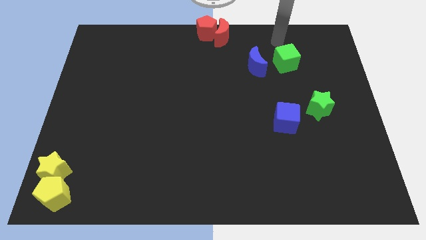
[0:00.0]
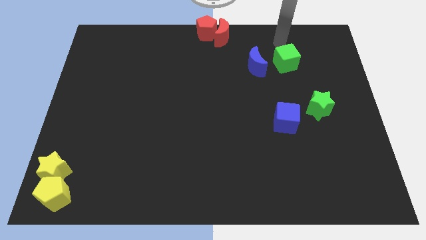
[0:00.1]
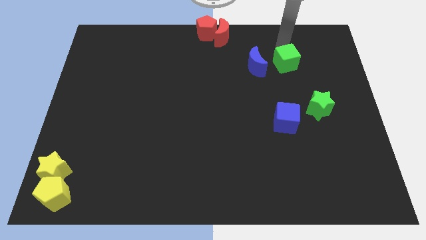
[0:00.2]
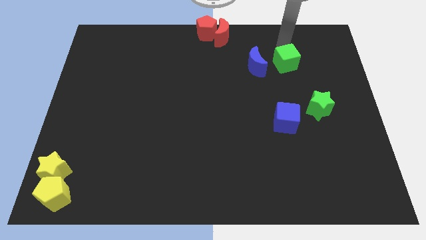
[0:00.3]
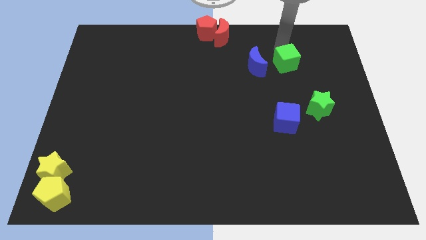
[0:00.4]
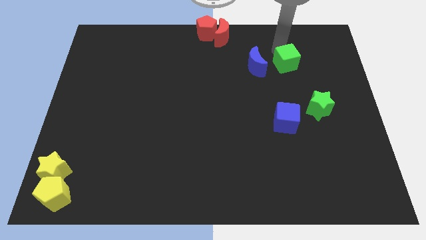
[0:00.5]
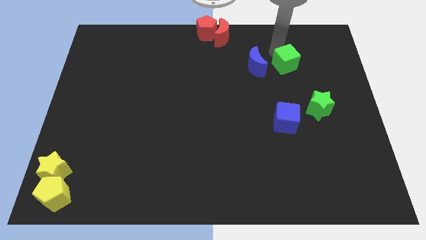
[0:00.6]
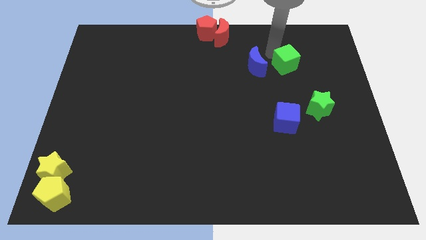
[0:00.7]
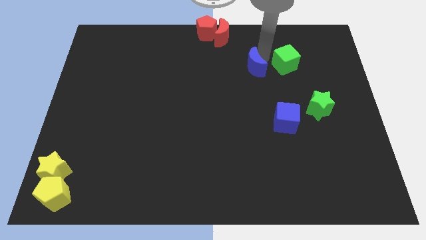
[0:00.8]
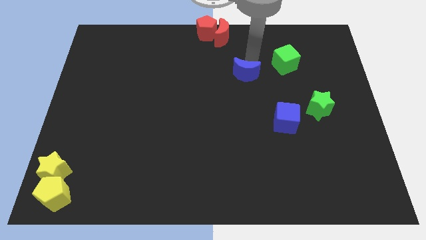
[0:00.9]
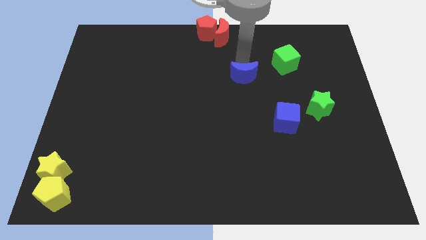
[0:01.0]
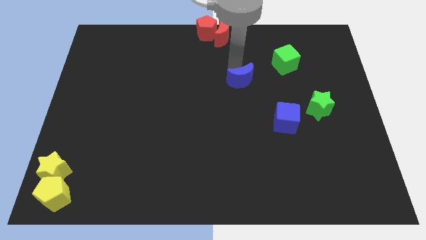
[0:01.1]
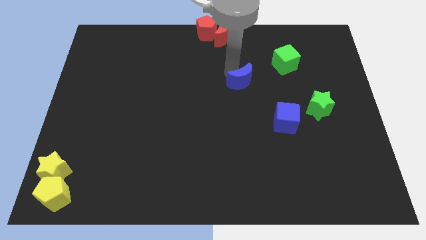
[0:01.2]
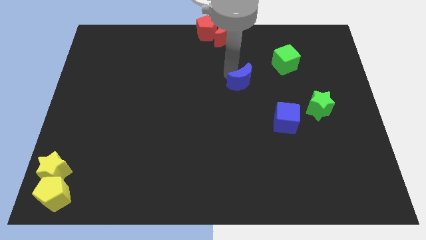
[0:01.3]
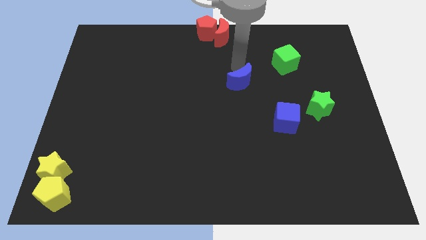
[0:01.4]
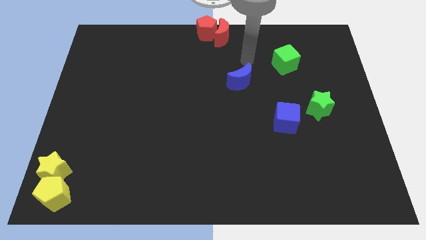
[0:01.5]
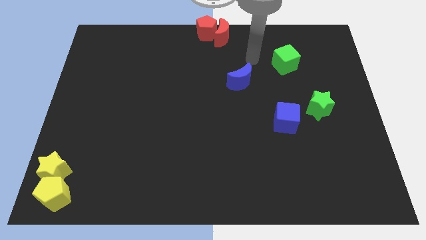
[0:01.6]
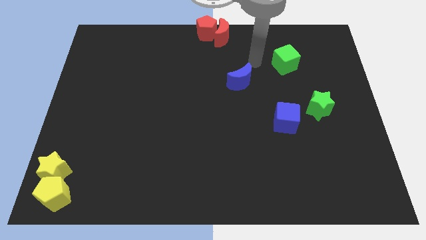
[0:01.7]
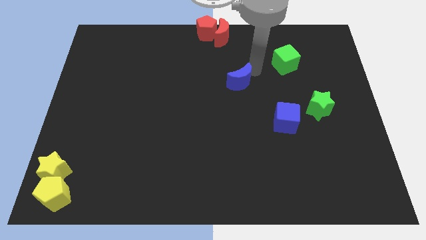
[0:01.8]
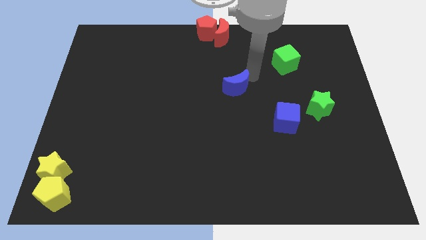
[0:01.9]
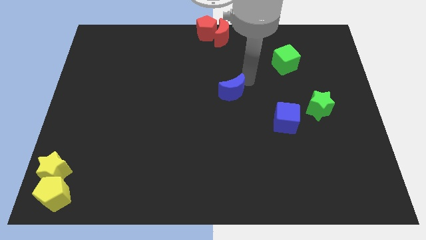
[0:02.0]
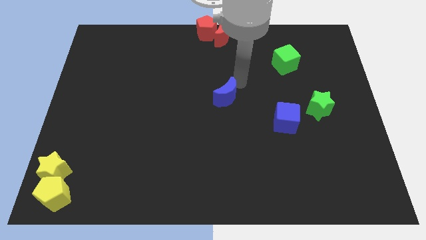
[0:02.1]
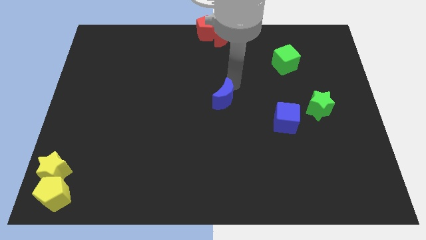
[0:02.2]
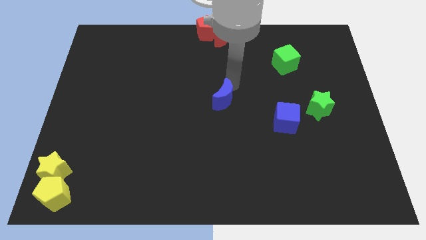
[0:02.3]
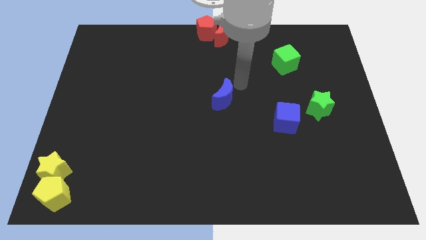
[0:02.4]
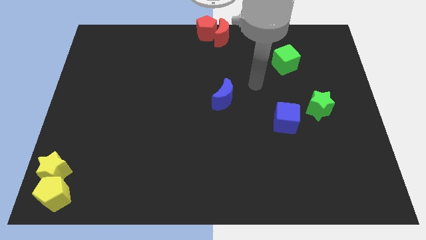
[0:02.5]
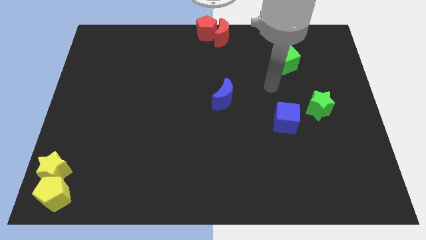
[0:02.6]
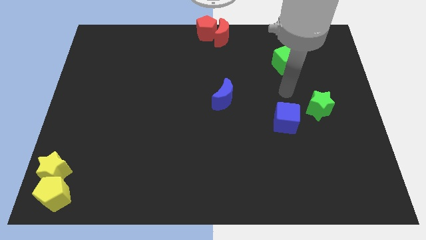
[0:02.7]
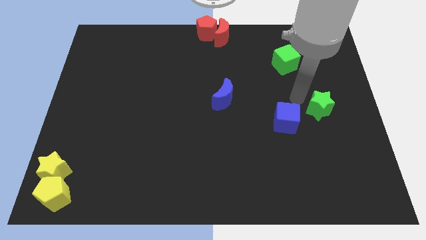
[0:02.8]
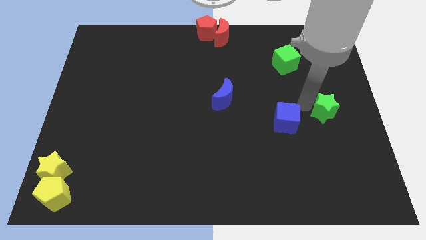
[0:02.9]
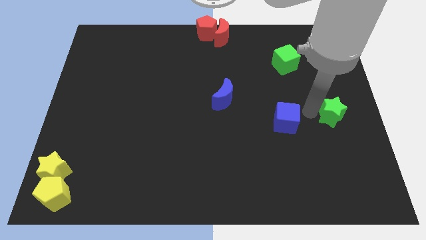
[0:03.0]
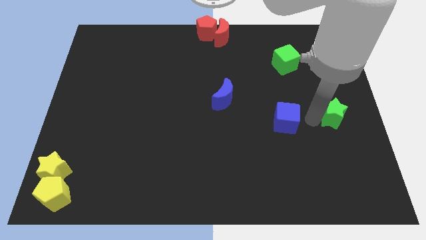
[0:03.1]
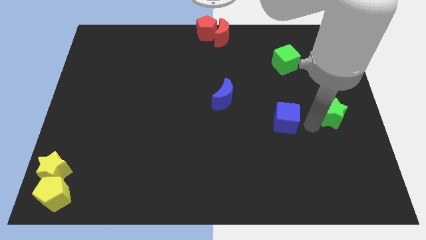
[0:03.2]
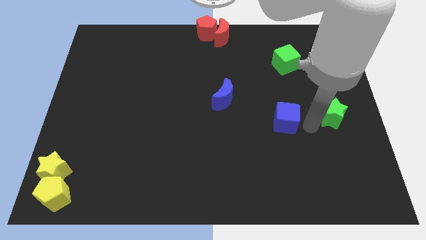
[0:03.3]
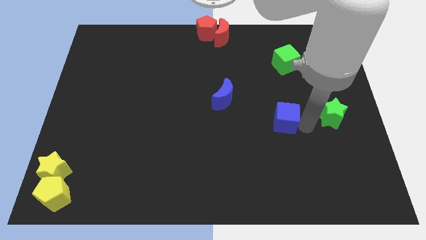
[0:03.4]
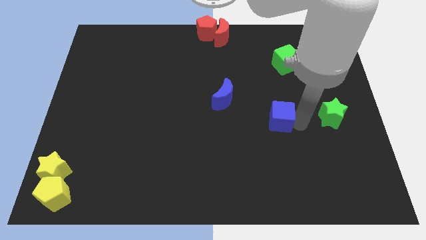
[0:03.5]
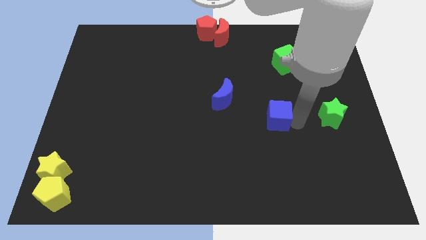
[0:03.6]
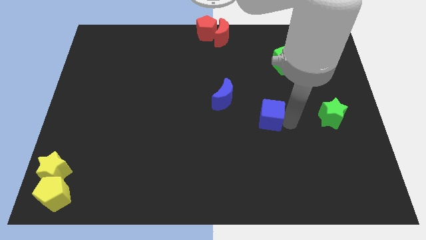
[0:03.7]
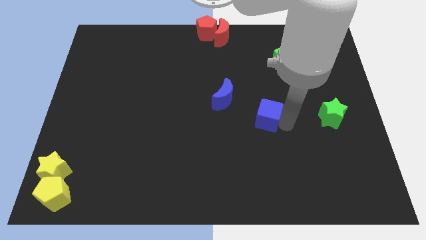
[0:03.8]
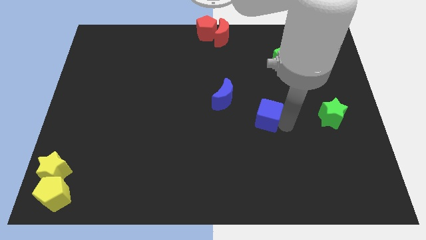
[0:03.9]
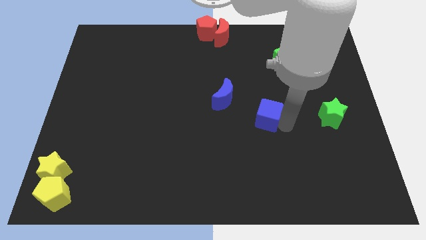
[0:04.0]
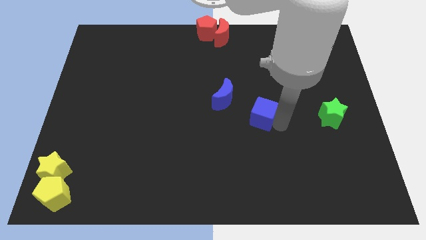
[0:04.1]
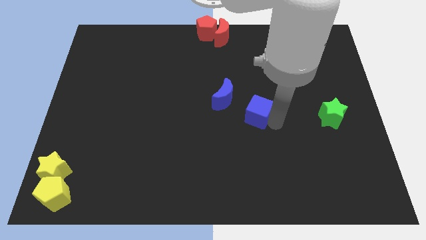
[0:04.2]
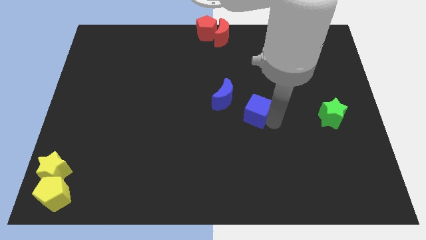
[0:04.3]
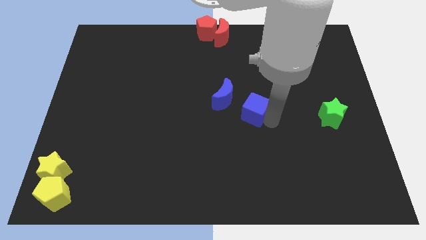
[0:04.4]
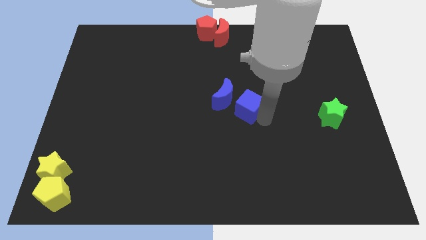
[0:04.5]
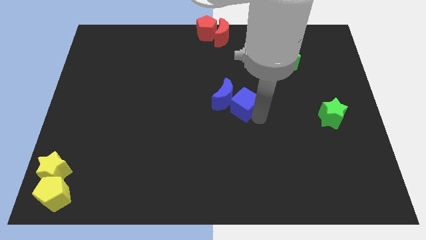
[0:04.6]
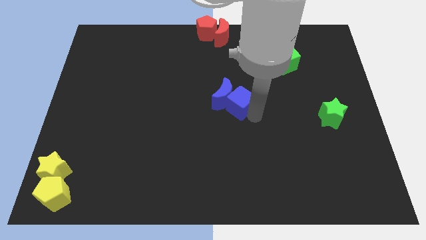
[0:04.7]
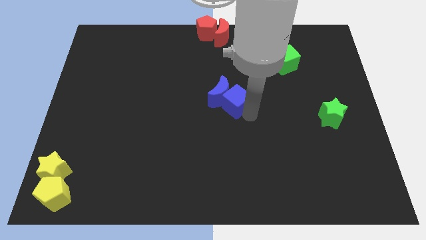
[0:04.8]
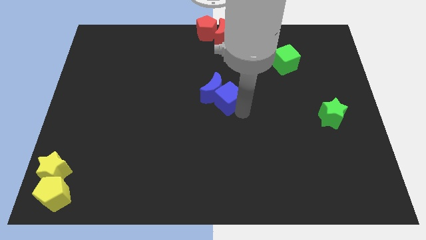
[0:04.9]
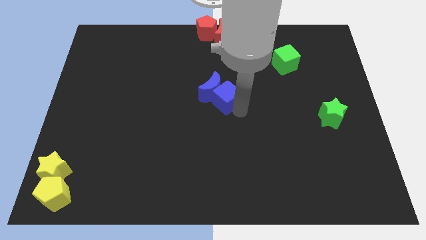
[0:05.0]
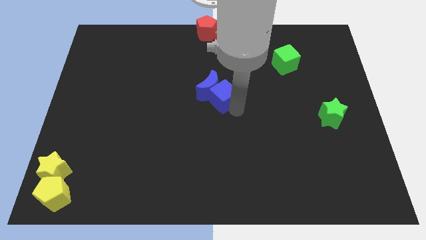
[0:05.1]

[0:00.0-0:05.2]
slightly move blue cube to the blue moon

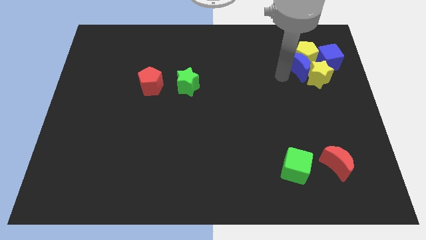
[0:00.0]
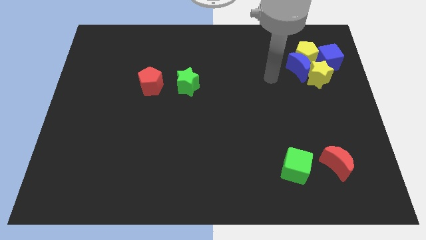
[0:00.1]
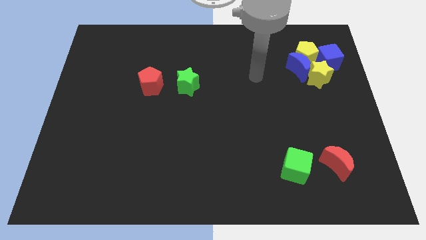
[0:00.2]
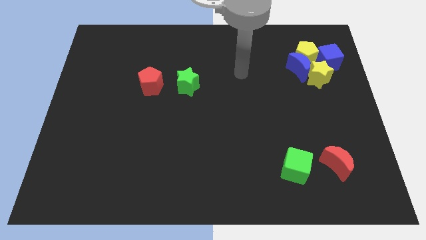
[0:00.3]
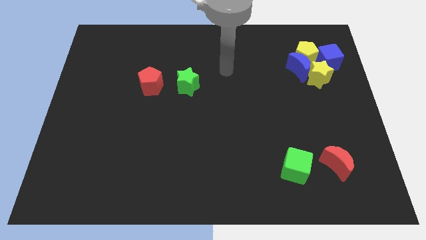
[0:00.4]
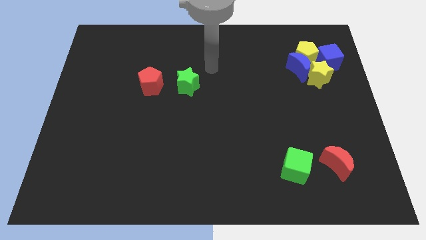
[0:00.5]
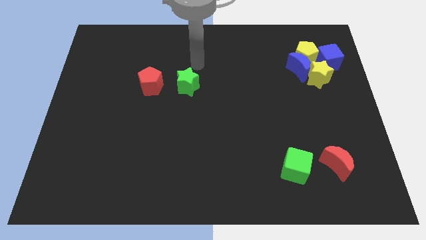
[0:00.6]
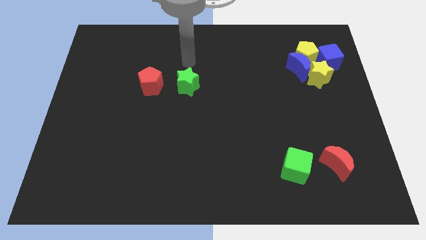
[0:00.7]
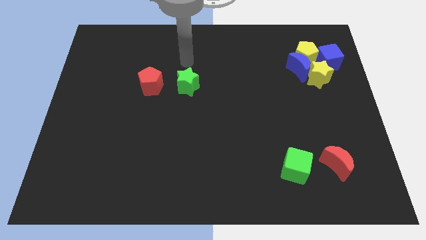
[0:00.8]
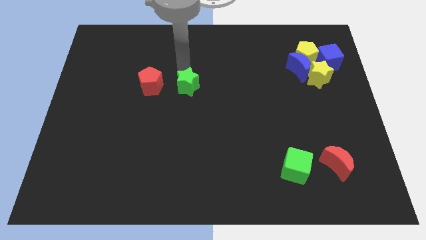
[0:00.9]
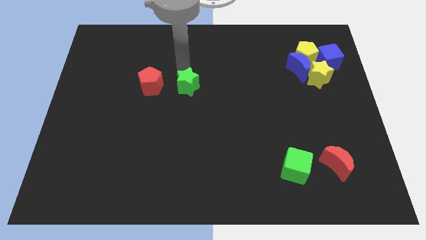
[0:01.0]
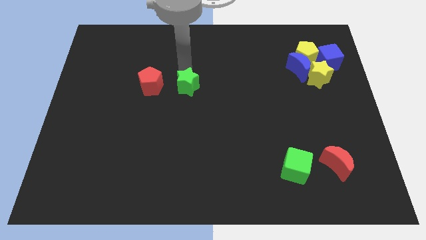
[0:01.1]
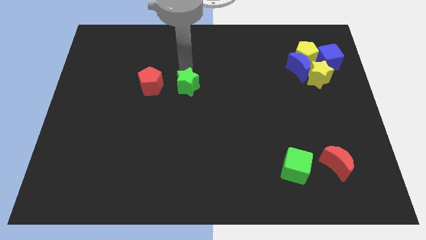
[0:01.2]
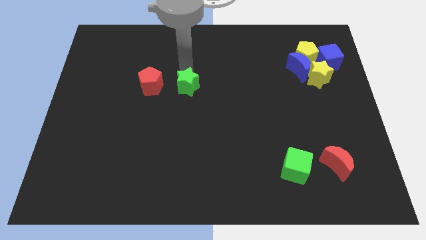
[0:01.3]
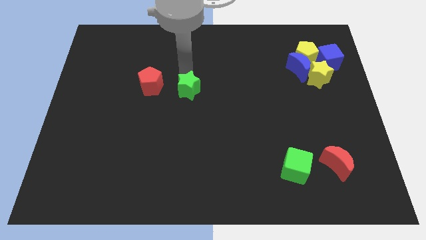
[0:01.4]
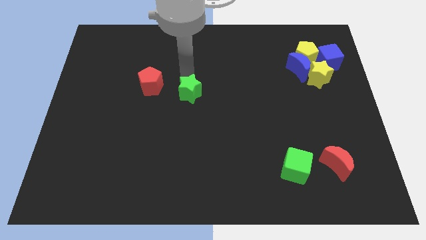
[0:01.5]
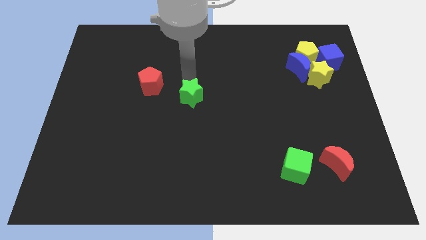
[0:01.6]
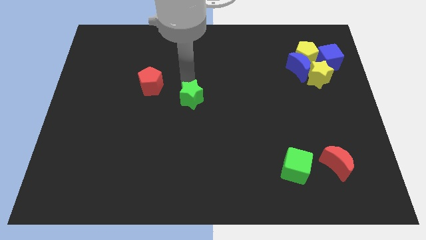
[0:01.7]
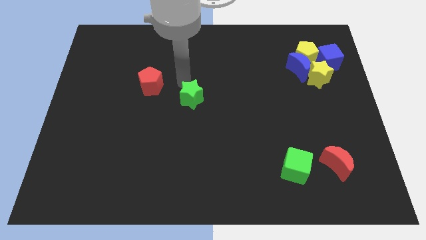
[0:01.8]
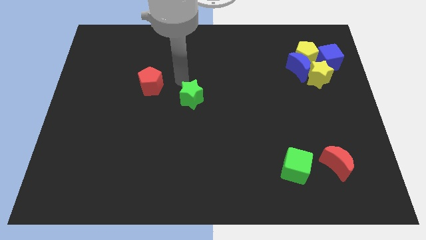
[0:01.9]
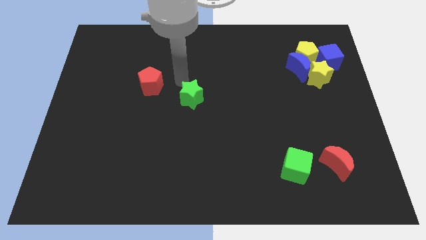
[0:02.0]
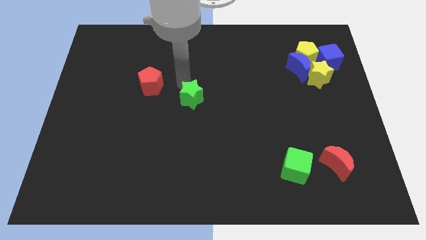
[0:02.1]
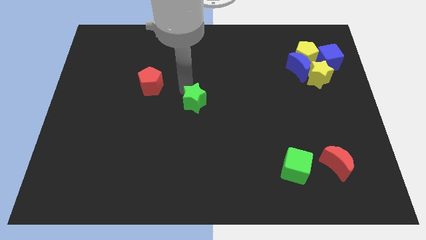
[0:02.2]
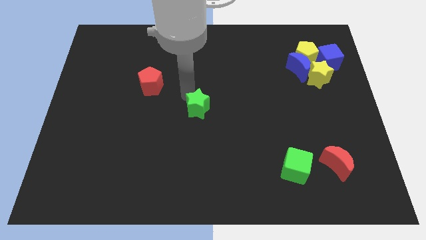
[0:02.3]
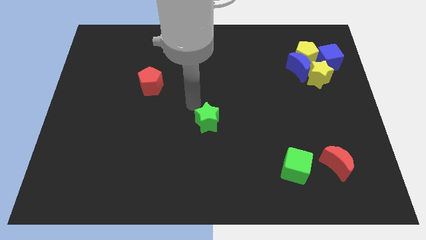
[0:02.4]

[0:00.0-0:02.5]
push the green star in between the red pentagon and green cube

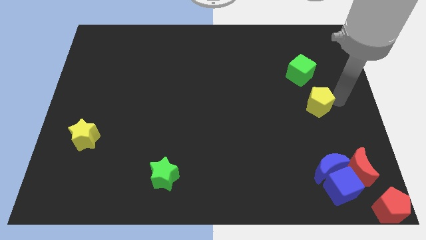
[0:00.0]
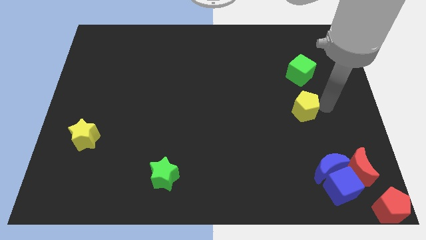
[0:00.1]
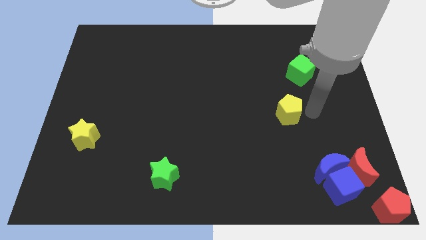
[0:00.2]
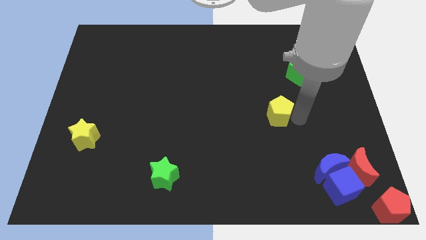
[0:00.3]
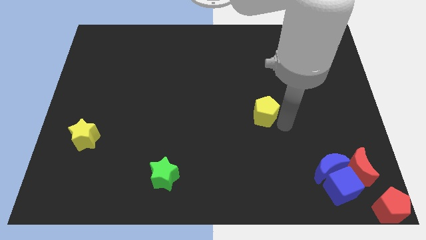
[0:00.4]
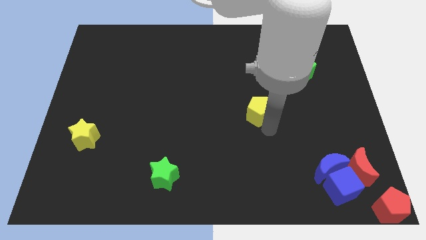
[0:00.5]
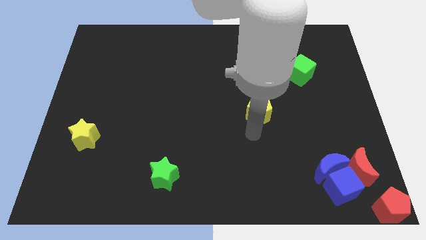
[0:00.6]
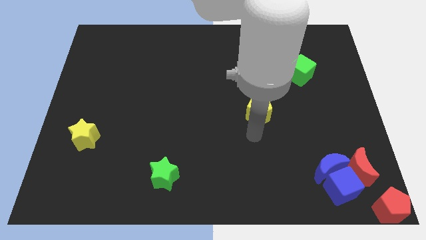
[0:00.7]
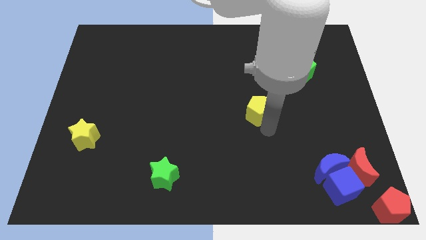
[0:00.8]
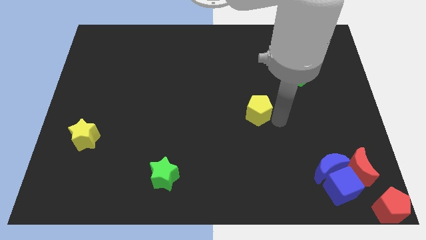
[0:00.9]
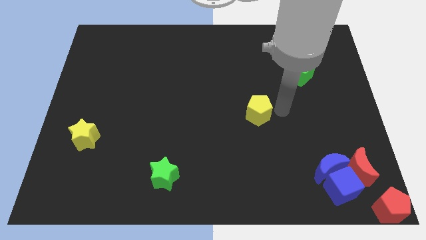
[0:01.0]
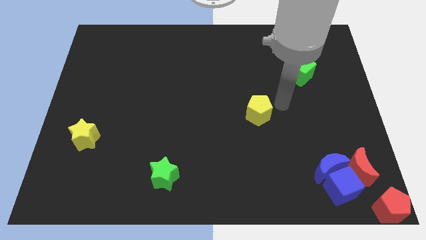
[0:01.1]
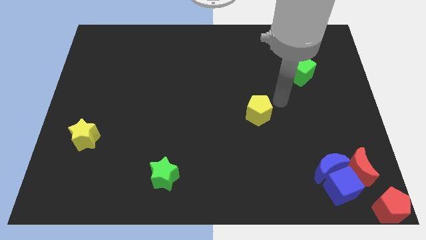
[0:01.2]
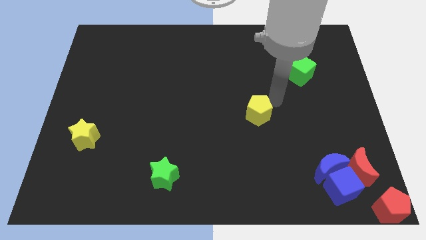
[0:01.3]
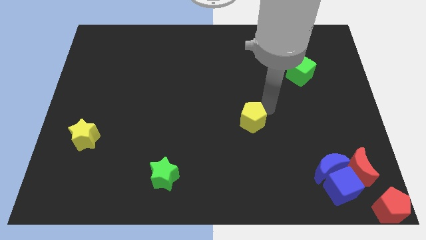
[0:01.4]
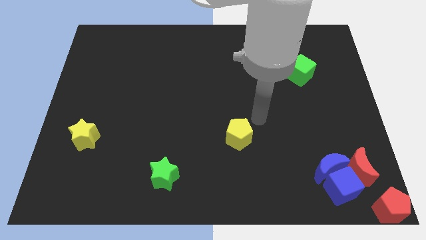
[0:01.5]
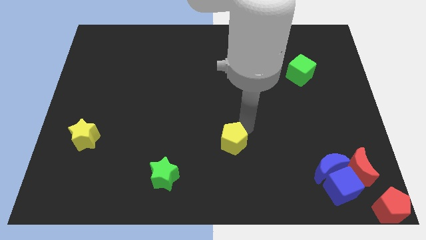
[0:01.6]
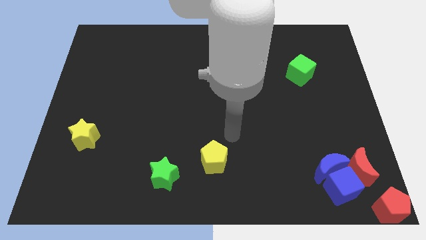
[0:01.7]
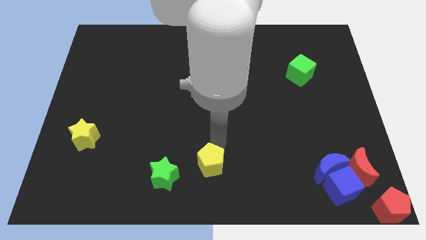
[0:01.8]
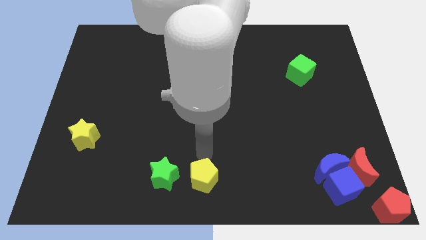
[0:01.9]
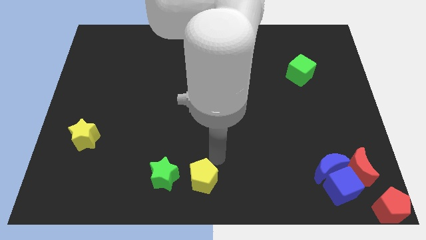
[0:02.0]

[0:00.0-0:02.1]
slide yellow pentagon to the right of green star
